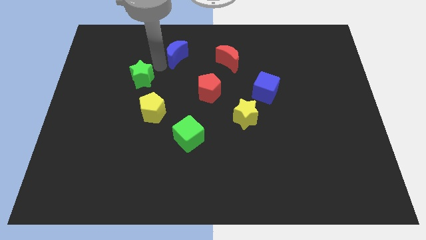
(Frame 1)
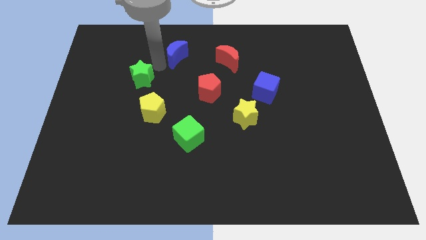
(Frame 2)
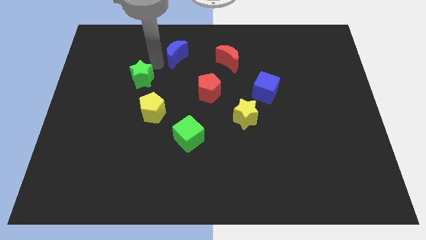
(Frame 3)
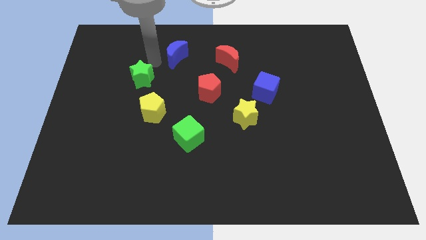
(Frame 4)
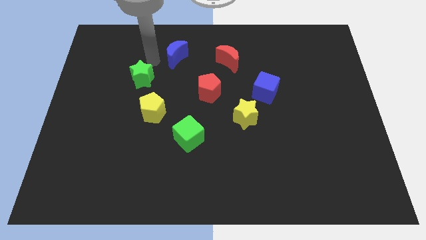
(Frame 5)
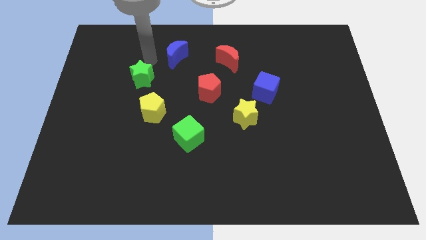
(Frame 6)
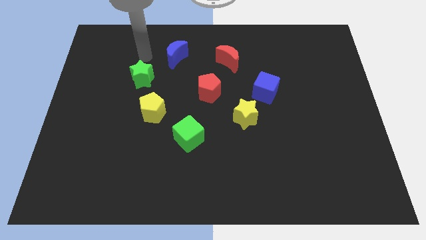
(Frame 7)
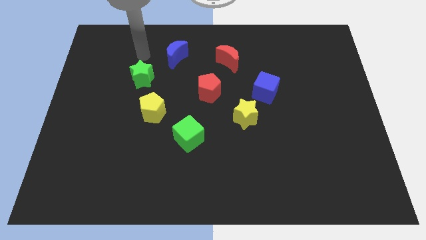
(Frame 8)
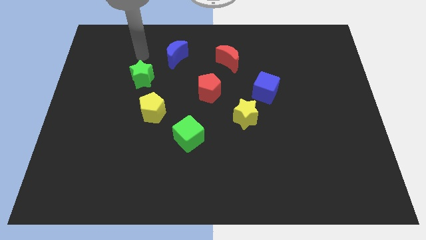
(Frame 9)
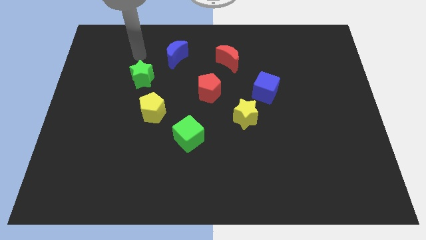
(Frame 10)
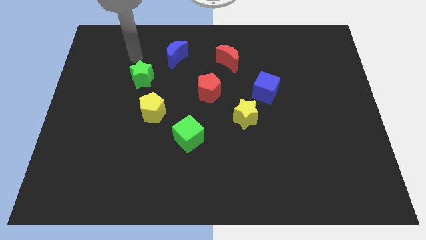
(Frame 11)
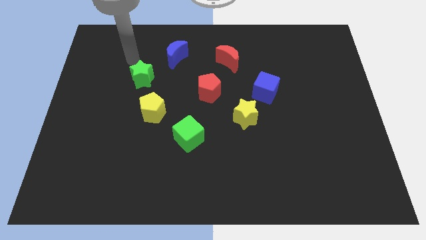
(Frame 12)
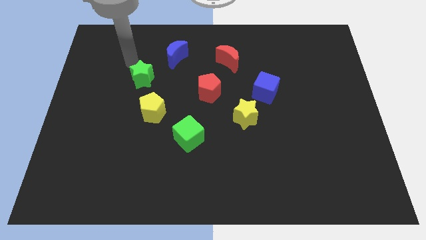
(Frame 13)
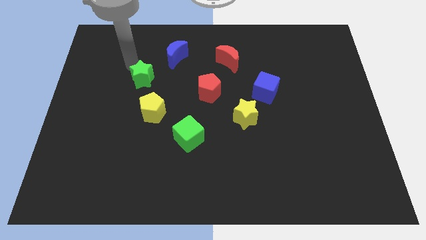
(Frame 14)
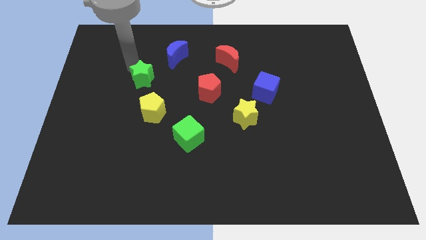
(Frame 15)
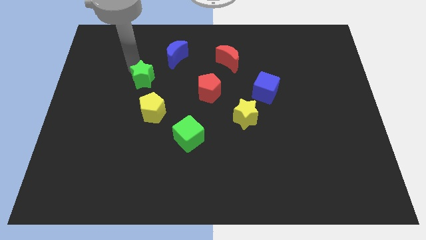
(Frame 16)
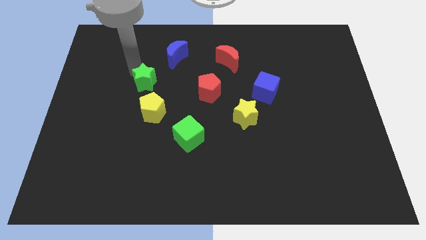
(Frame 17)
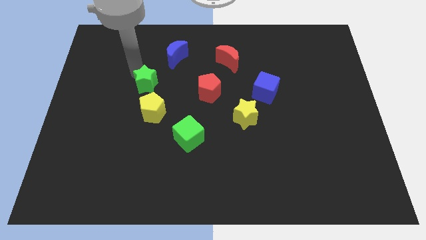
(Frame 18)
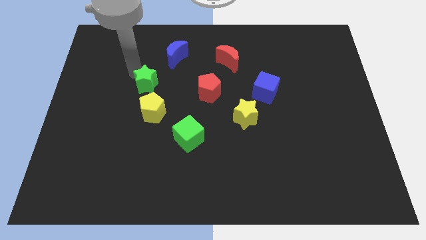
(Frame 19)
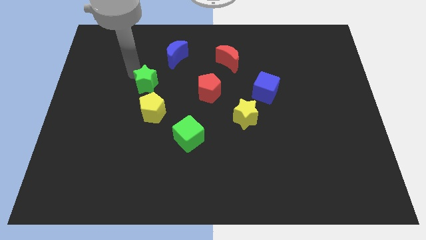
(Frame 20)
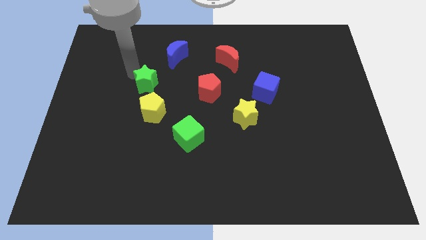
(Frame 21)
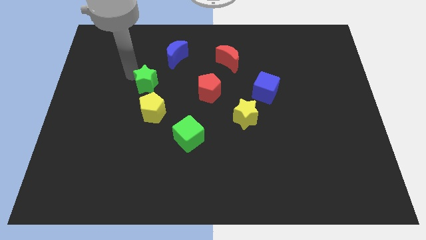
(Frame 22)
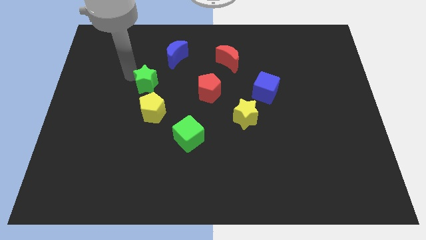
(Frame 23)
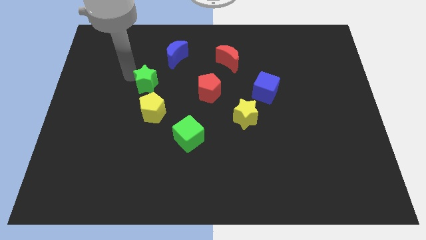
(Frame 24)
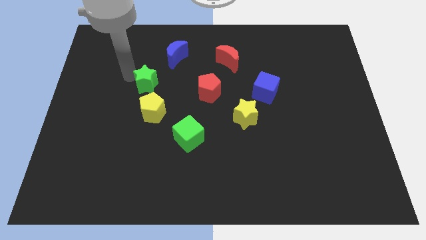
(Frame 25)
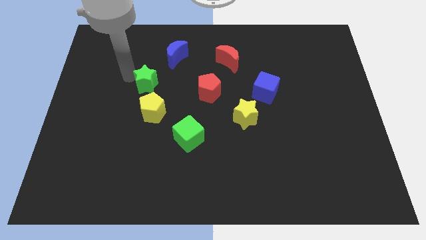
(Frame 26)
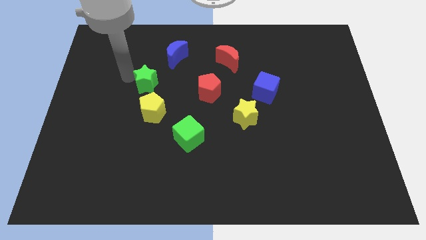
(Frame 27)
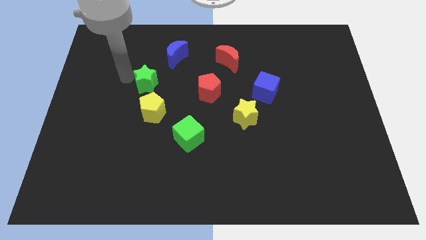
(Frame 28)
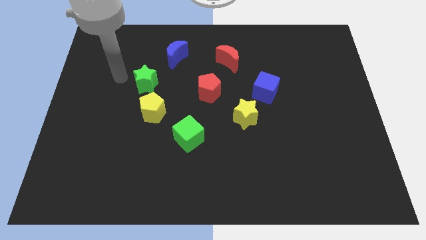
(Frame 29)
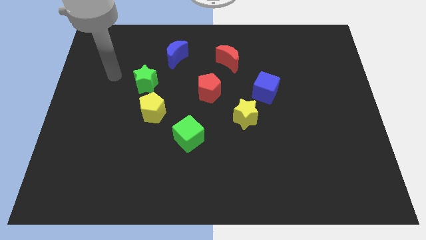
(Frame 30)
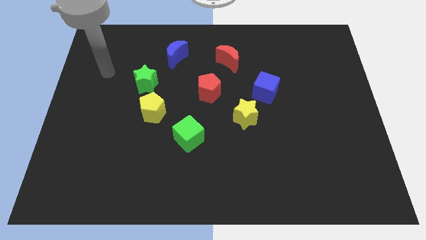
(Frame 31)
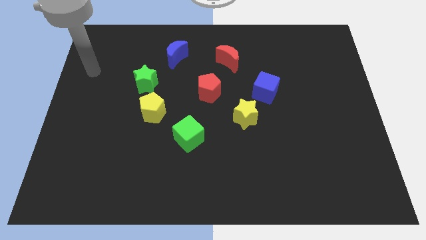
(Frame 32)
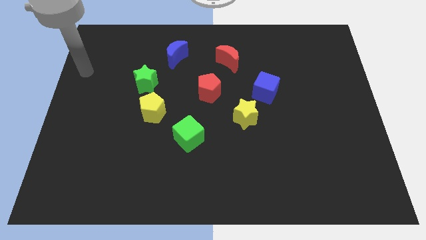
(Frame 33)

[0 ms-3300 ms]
push the green star slightly to the right side board

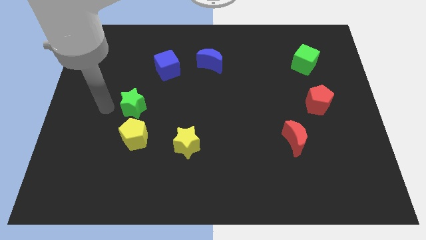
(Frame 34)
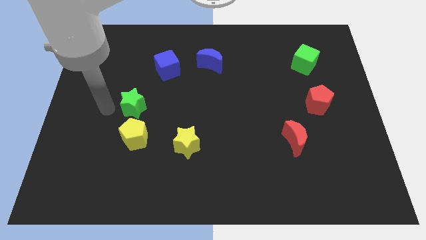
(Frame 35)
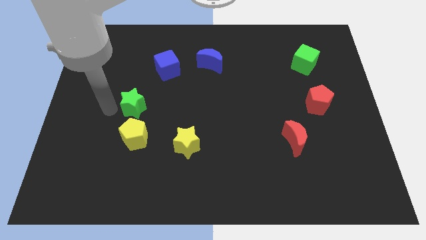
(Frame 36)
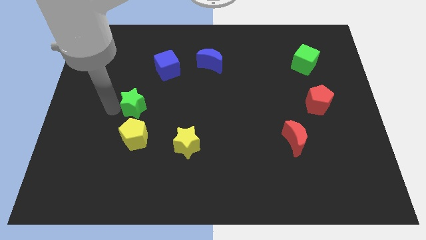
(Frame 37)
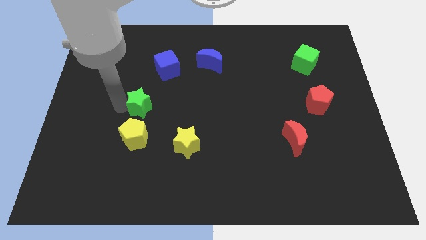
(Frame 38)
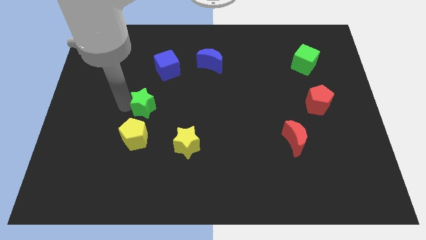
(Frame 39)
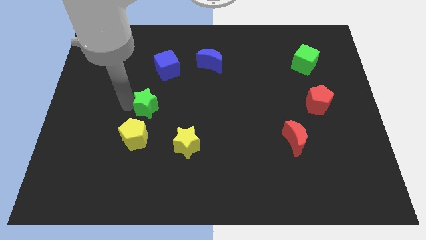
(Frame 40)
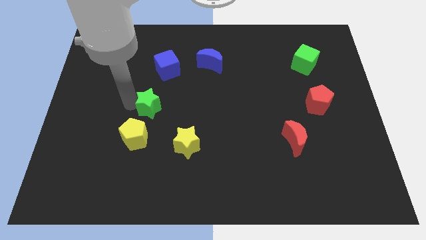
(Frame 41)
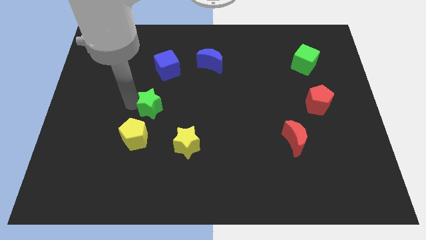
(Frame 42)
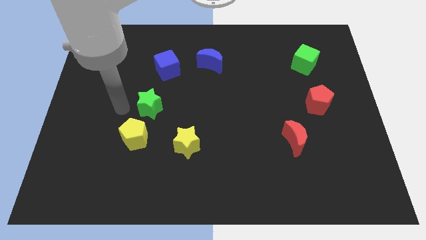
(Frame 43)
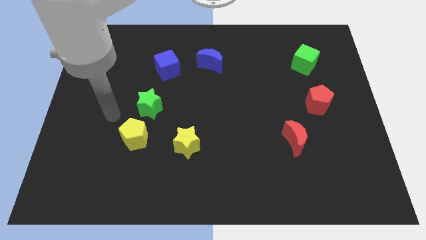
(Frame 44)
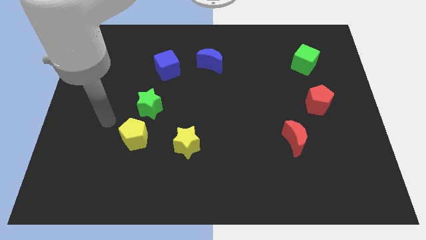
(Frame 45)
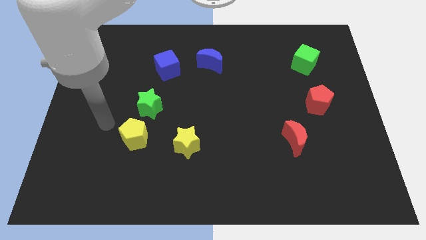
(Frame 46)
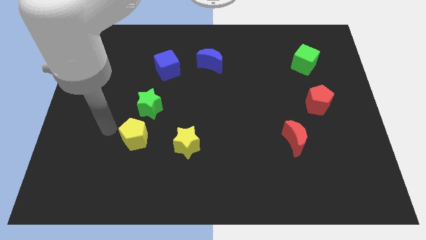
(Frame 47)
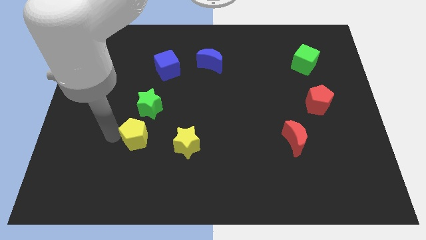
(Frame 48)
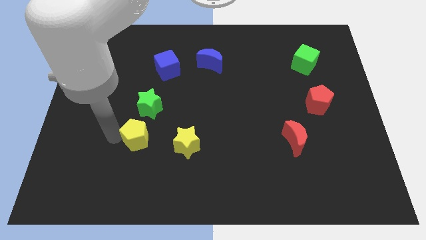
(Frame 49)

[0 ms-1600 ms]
slightly push the green star to the right

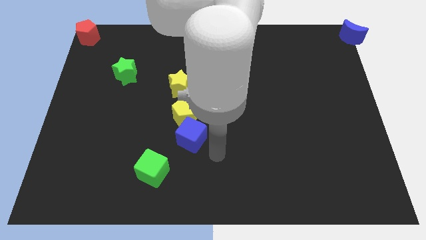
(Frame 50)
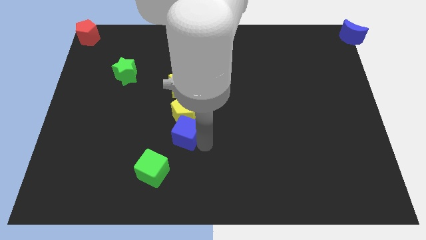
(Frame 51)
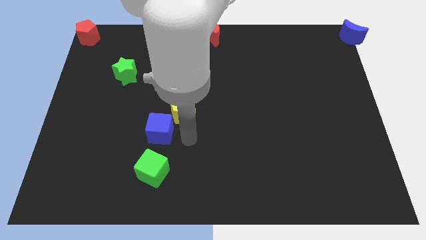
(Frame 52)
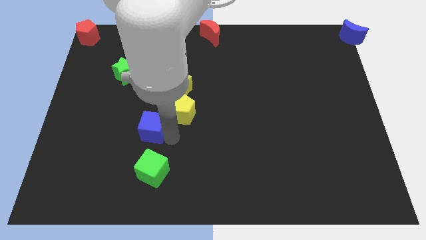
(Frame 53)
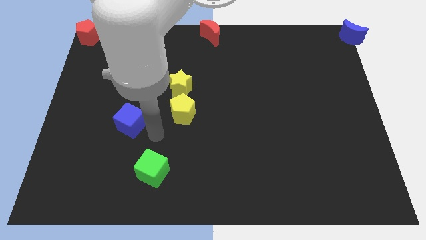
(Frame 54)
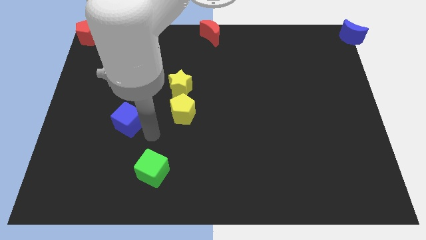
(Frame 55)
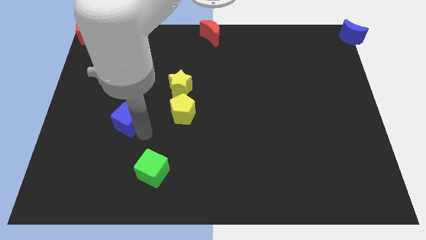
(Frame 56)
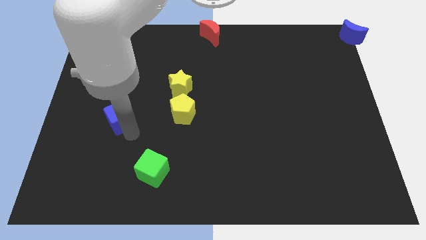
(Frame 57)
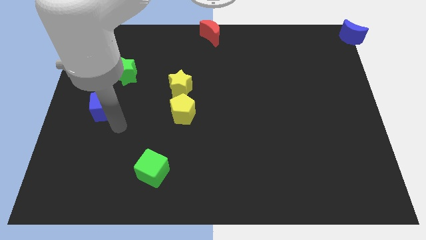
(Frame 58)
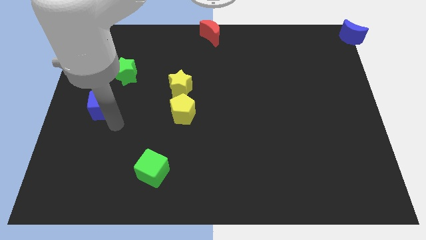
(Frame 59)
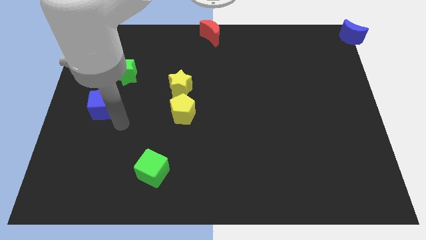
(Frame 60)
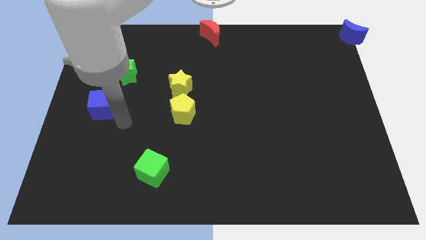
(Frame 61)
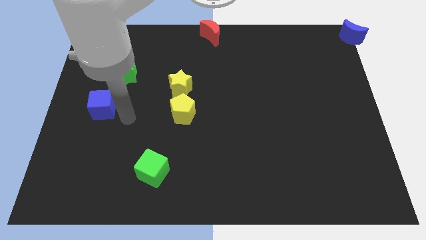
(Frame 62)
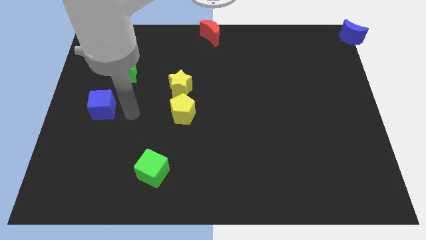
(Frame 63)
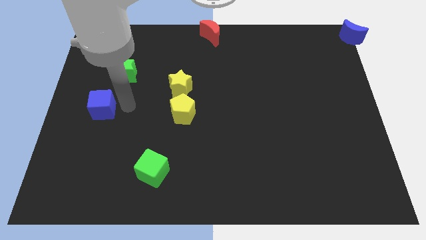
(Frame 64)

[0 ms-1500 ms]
separate the blue cube from the yellow pentagon

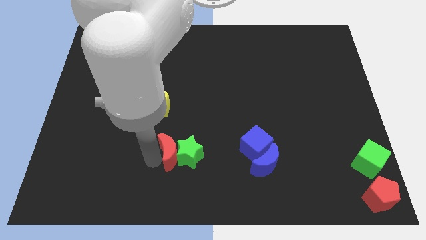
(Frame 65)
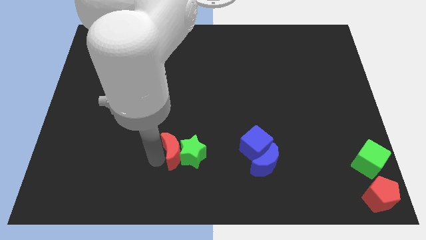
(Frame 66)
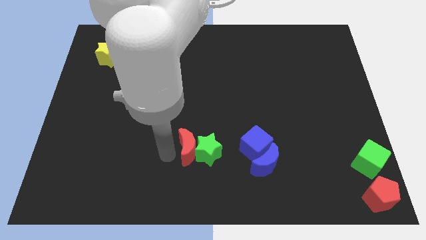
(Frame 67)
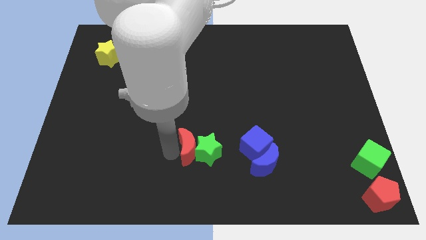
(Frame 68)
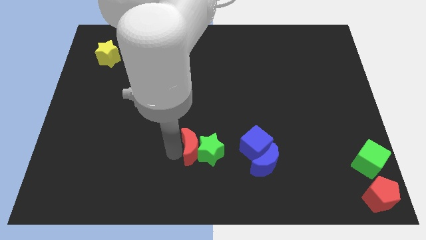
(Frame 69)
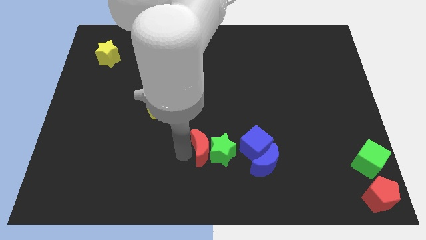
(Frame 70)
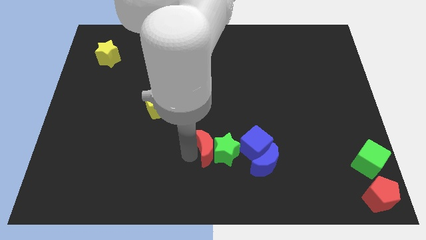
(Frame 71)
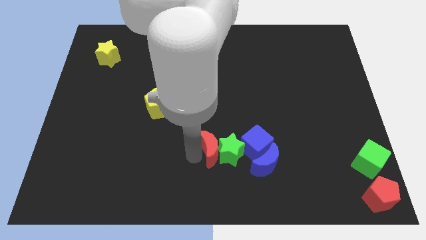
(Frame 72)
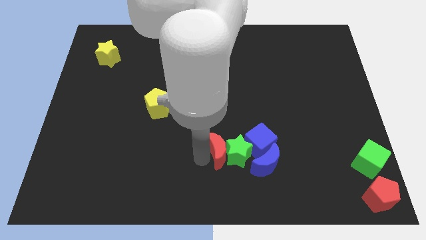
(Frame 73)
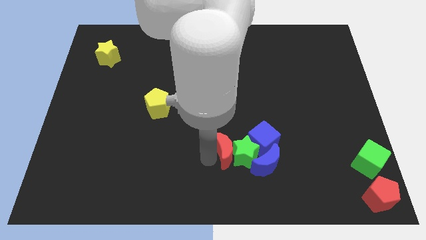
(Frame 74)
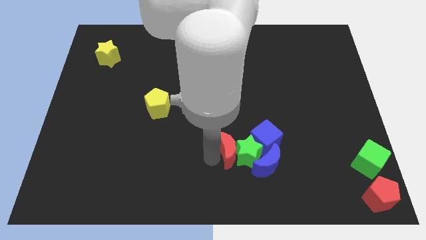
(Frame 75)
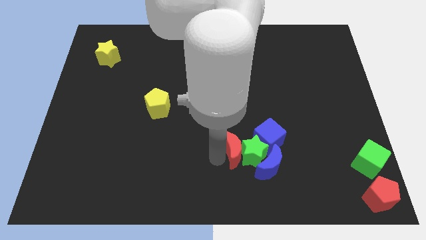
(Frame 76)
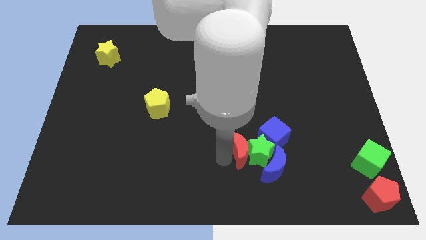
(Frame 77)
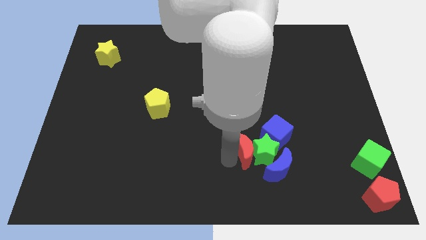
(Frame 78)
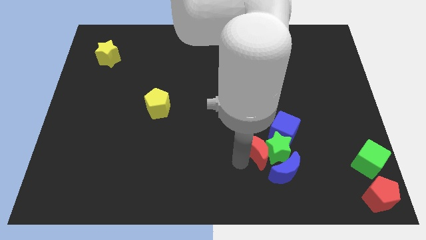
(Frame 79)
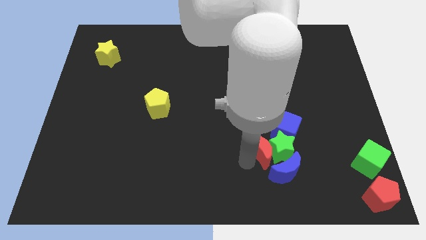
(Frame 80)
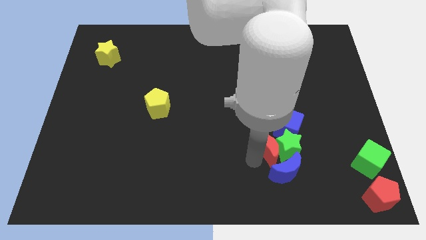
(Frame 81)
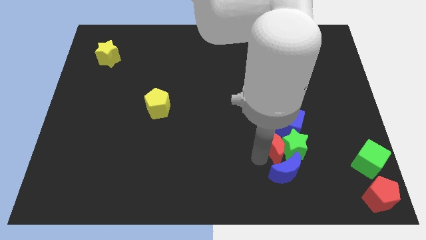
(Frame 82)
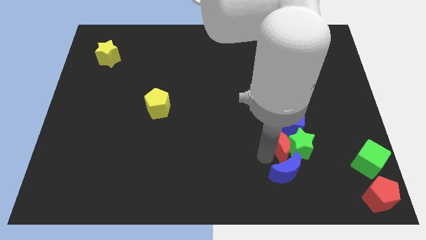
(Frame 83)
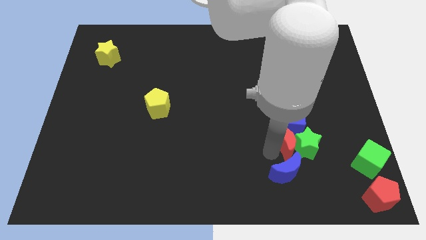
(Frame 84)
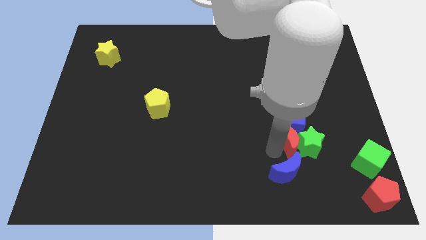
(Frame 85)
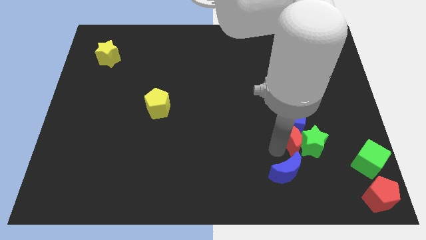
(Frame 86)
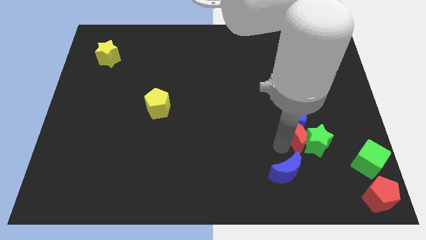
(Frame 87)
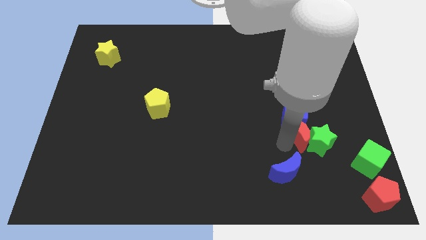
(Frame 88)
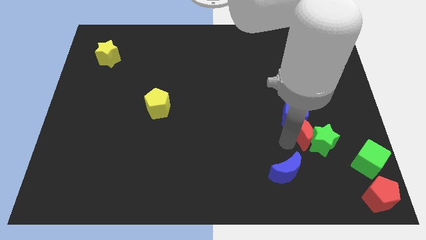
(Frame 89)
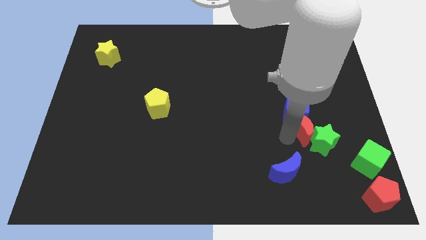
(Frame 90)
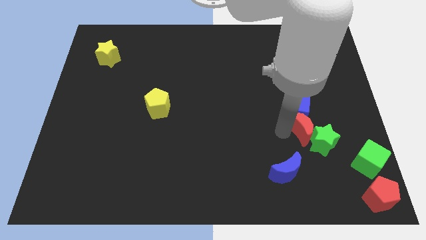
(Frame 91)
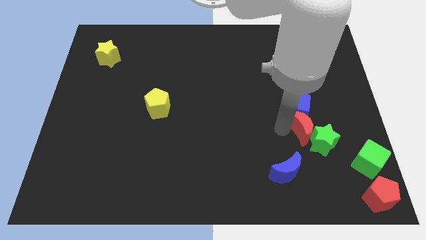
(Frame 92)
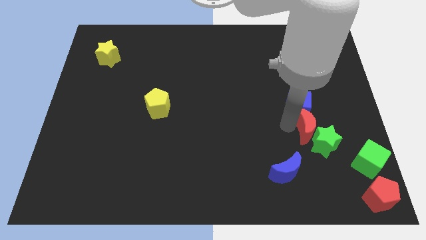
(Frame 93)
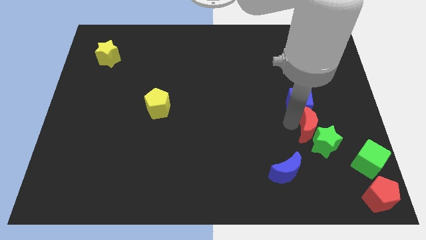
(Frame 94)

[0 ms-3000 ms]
separate the blue cube and blue crescent with the red crescent and green star
